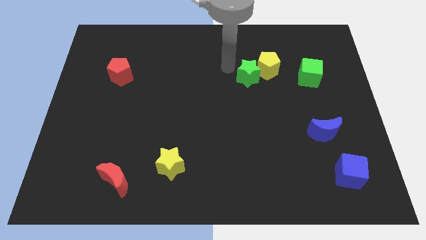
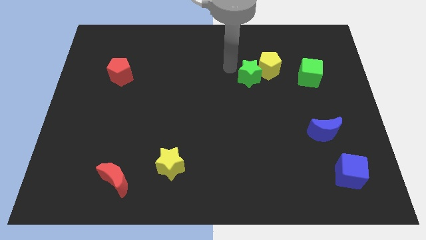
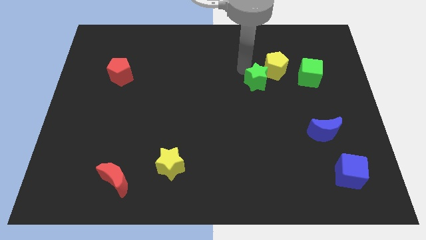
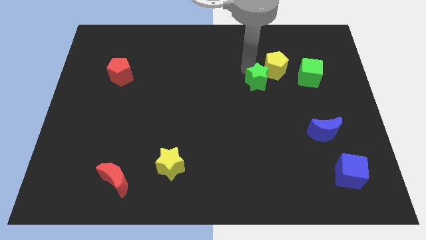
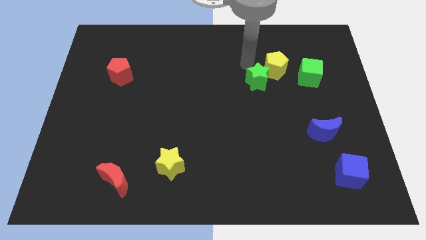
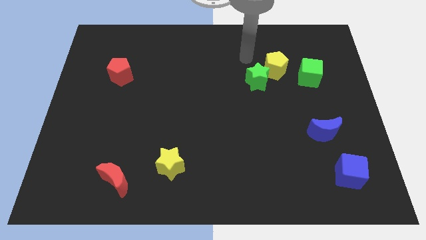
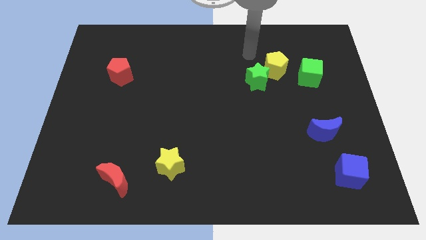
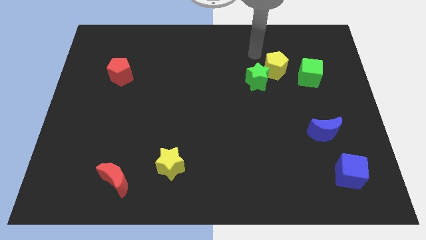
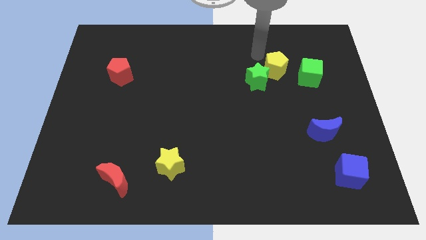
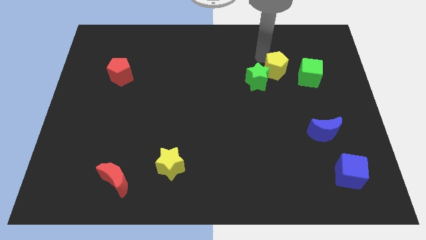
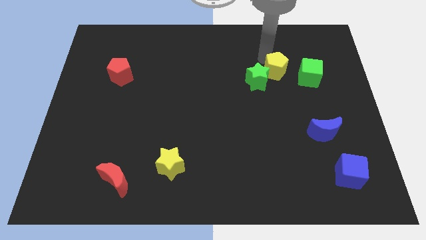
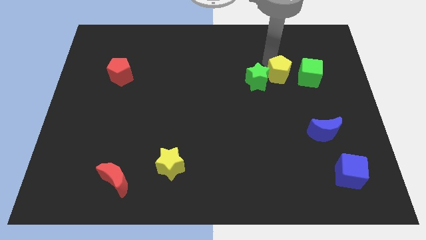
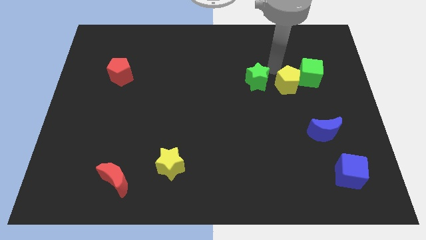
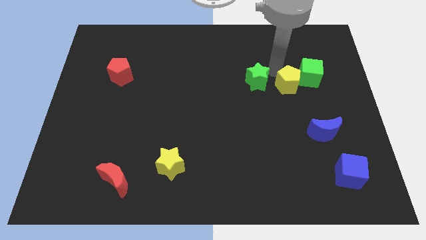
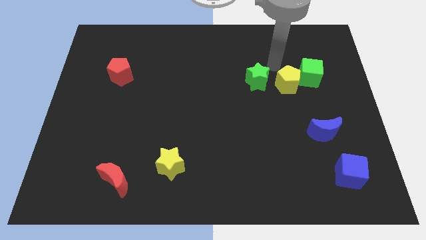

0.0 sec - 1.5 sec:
push the yellow pentagon in between the green cube and green star

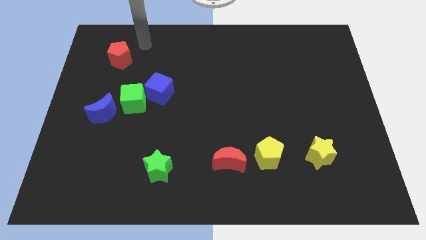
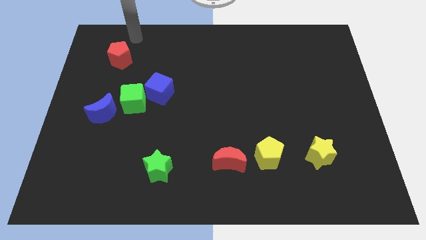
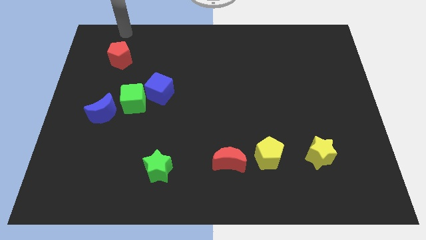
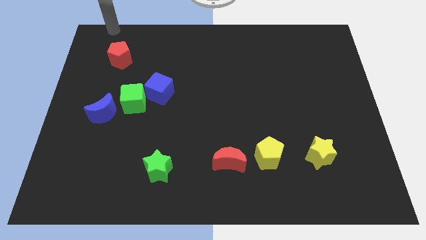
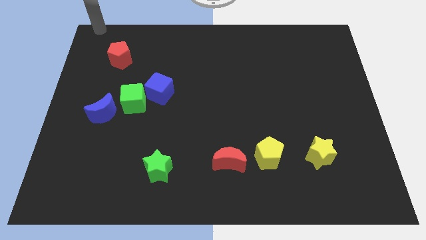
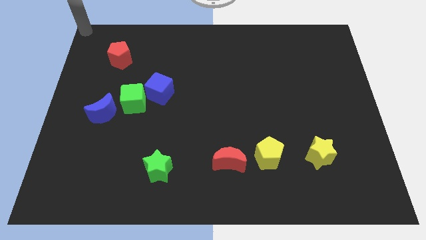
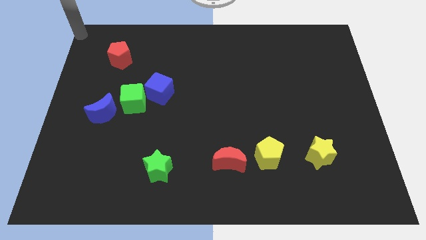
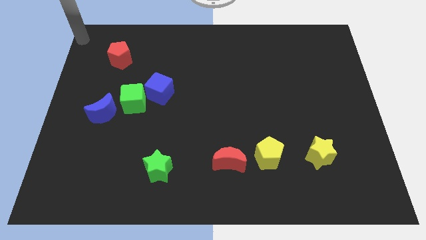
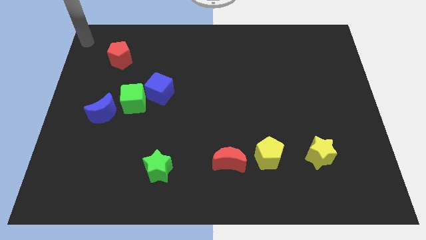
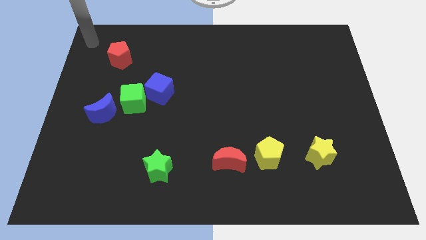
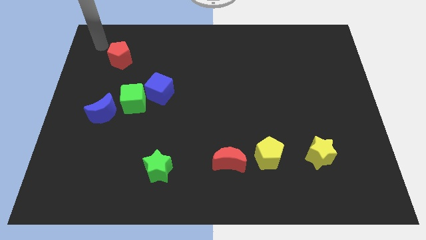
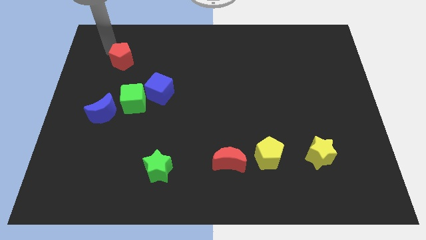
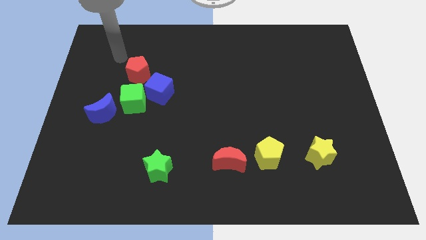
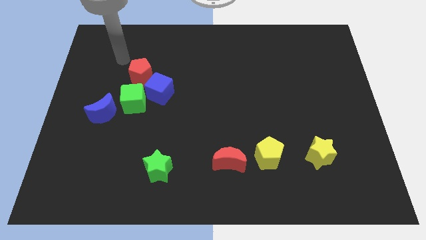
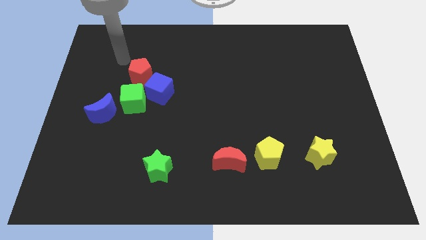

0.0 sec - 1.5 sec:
move the red pentagon close to the blue cube

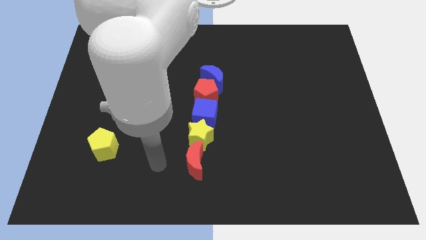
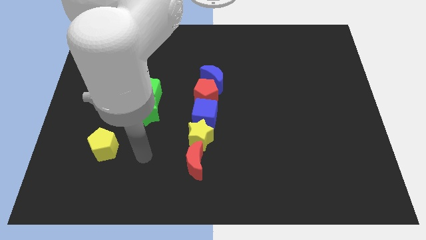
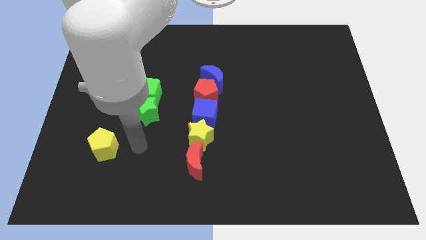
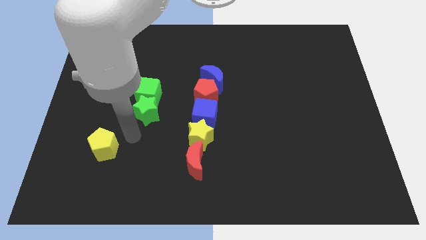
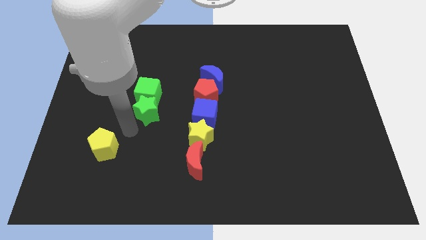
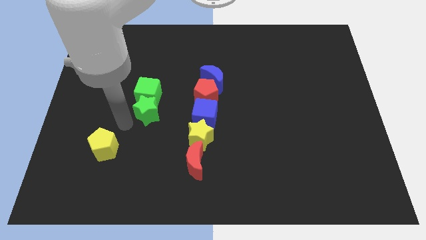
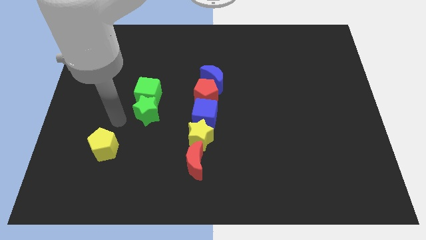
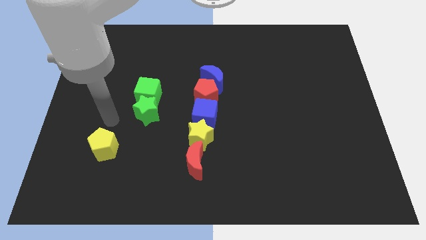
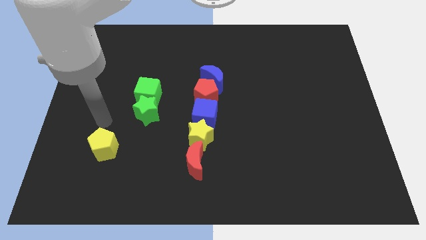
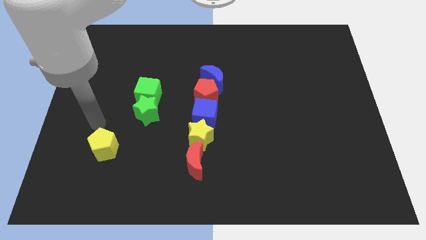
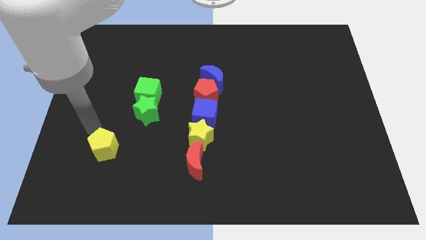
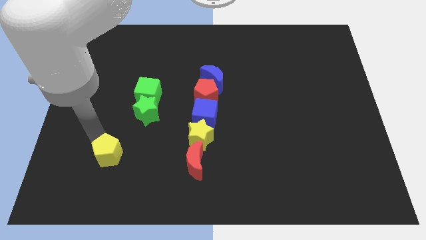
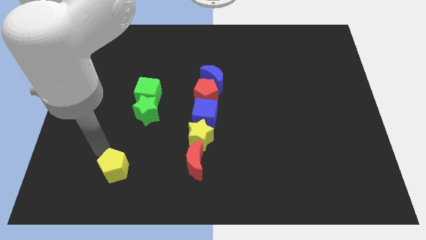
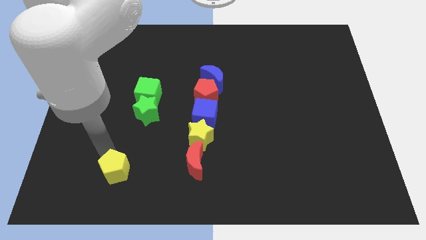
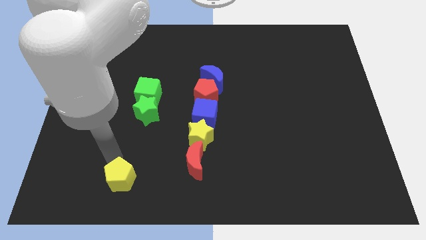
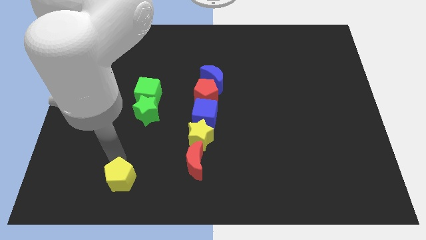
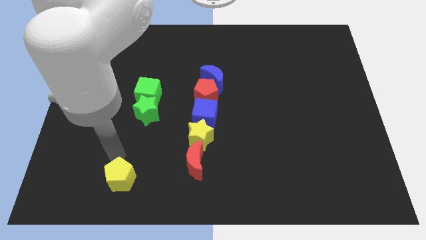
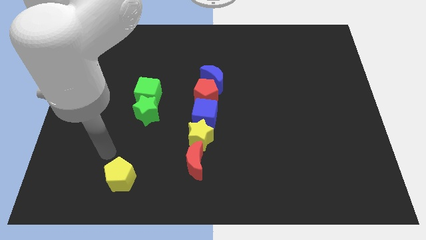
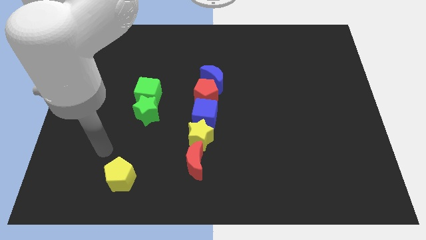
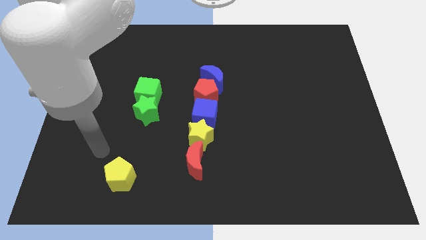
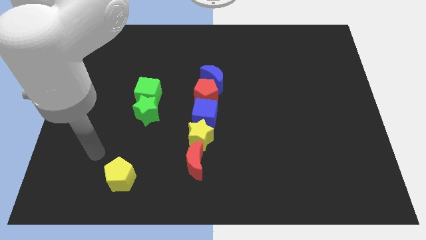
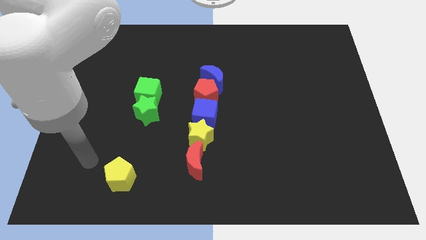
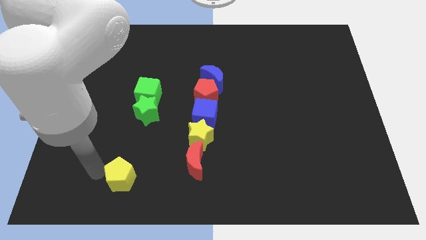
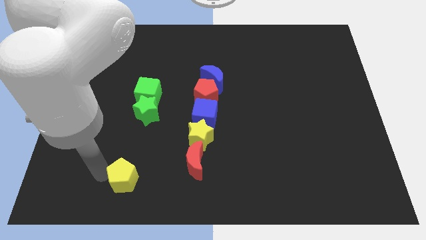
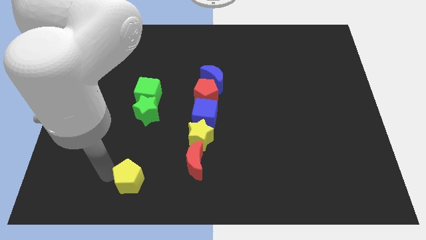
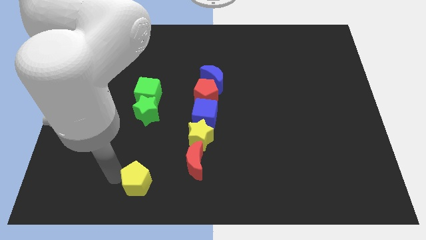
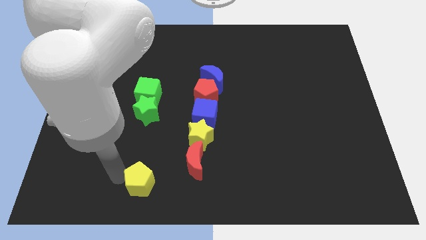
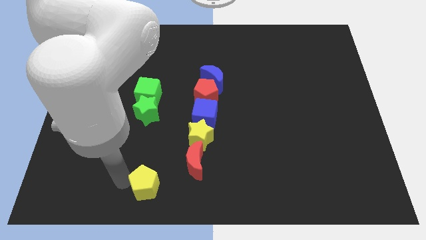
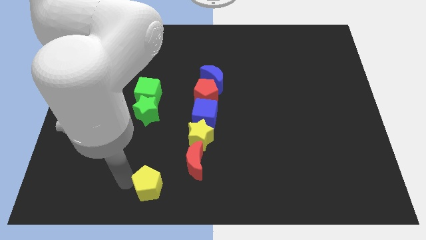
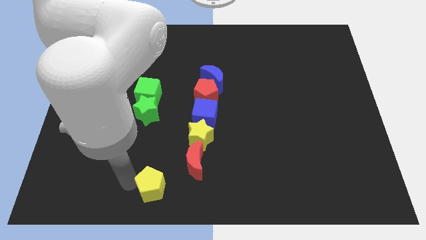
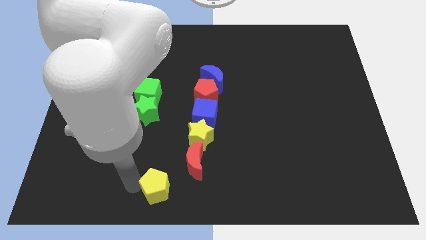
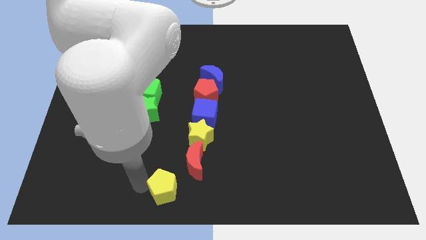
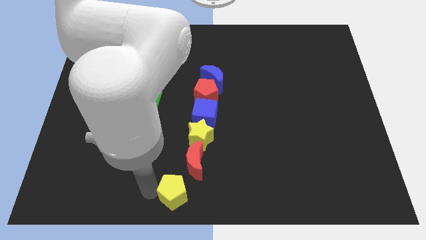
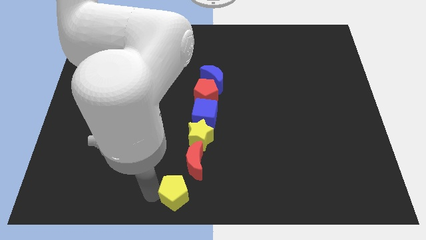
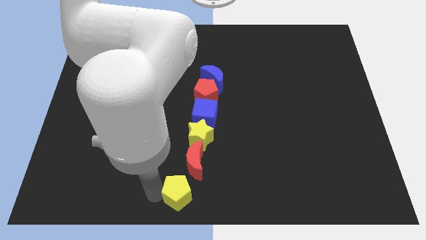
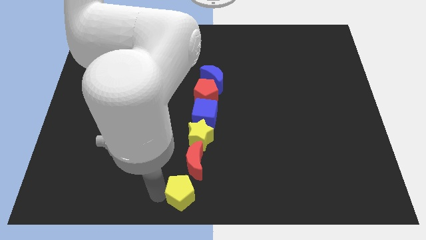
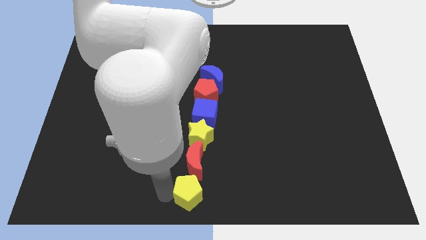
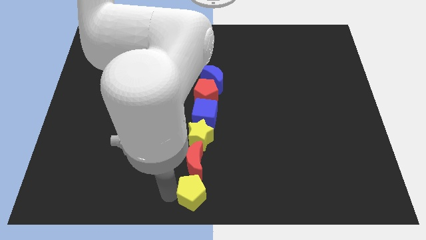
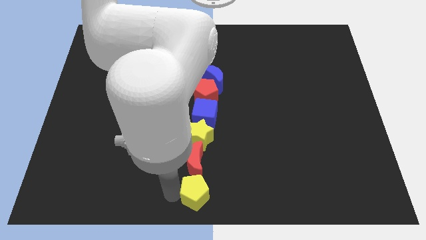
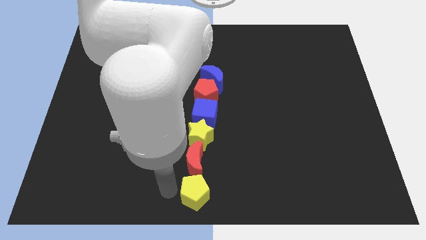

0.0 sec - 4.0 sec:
push yellow pentagon to bottom center of the board

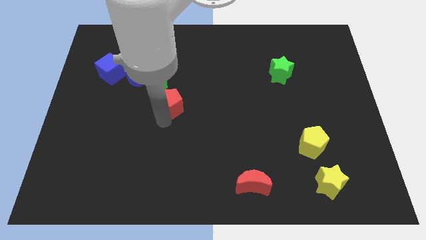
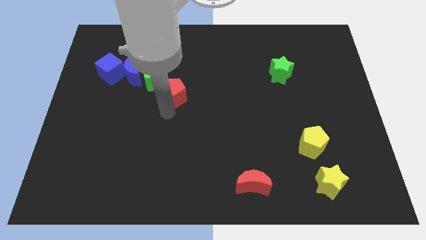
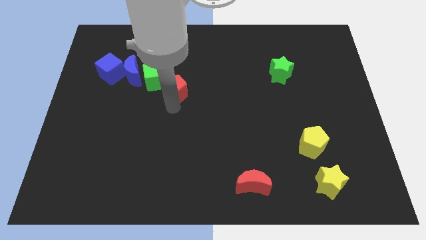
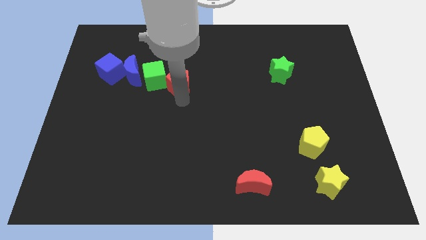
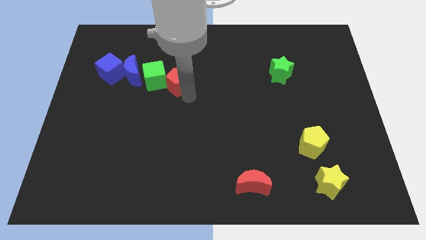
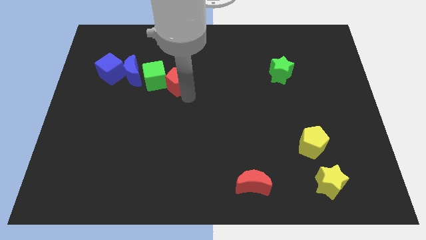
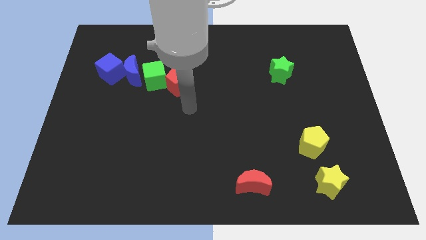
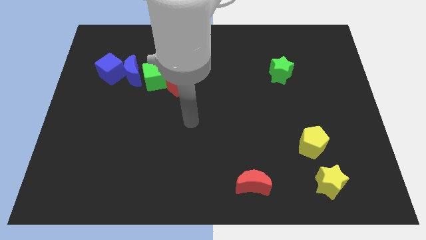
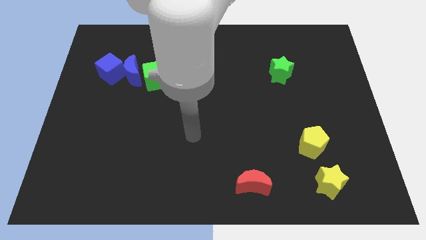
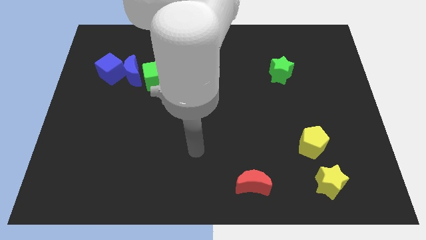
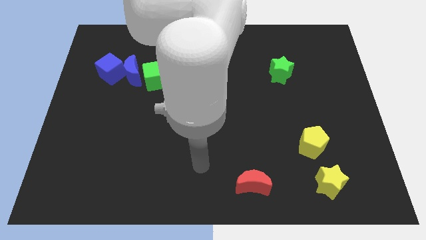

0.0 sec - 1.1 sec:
place the red pentagon right to the green cube

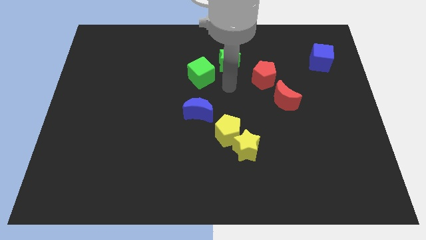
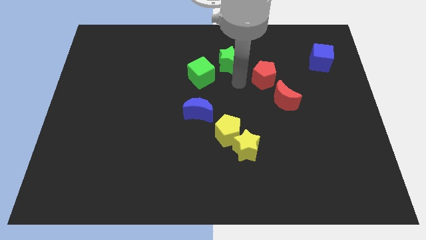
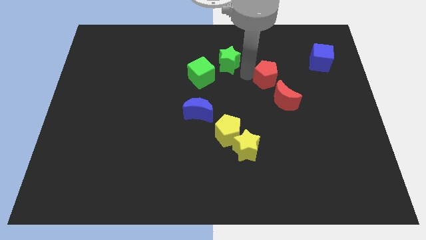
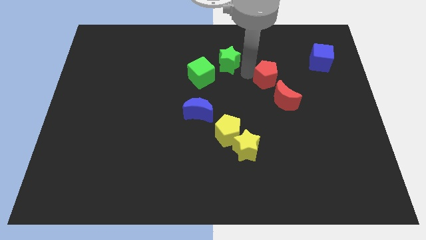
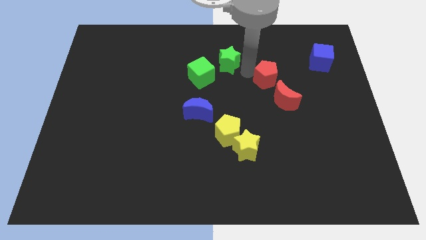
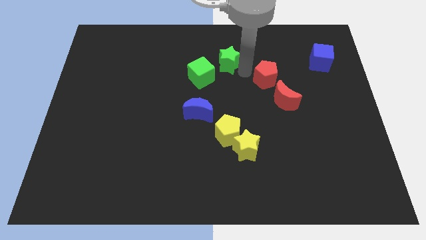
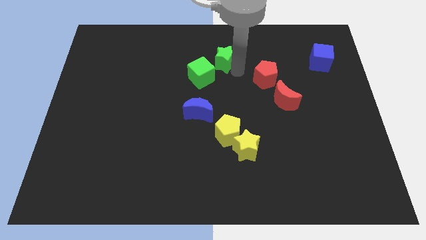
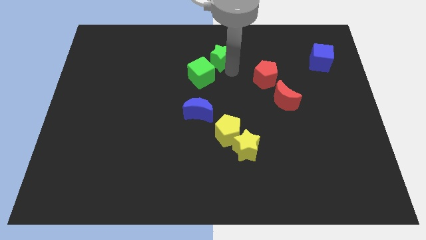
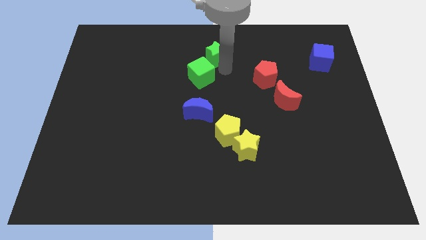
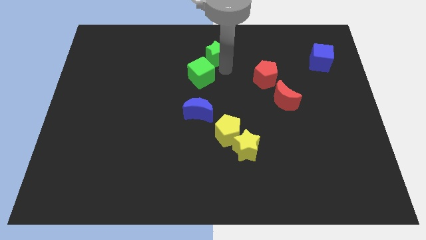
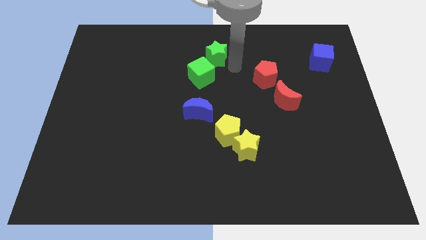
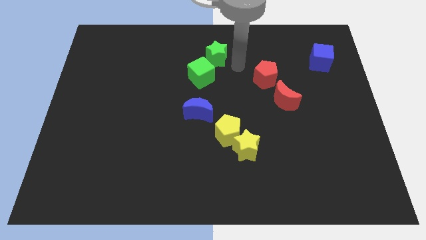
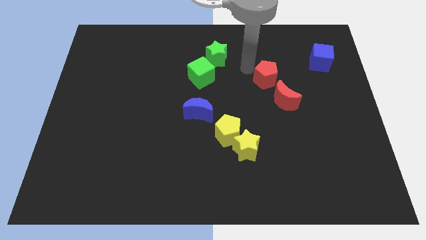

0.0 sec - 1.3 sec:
push the green star to the top right side of the green cube
